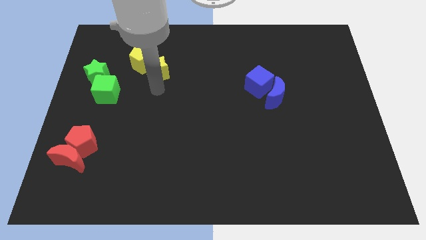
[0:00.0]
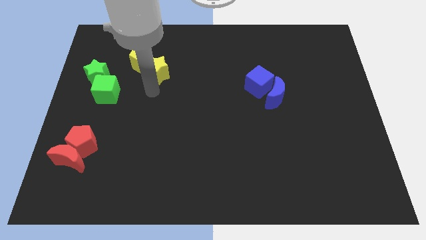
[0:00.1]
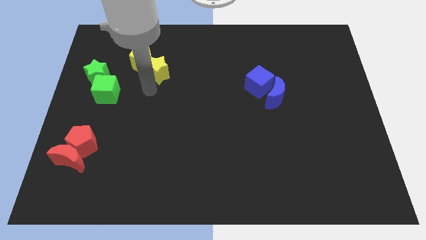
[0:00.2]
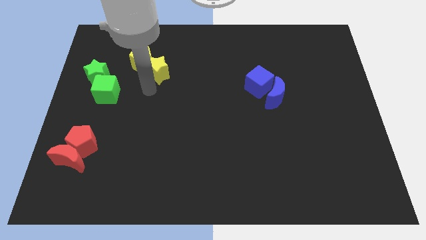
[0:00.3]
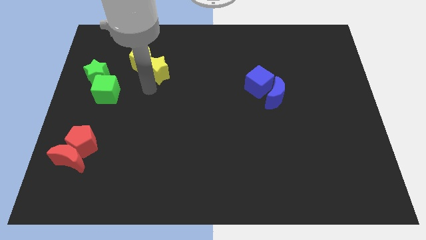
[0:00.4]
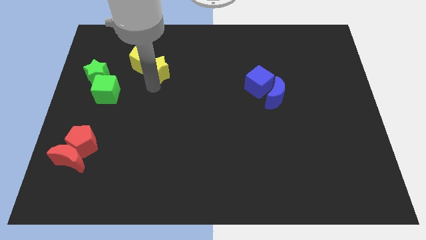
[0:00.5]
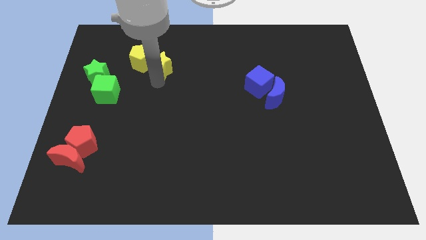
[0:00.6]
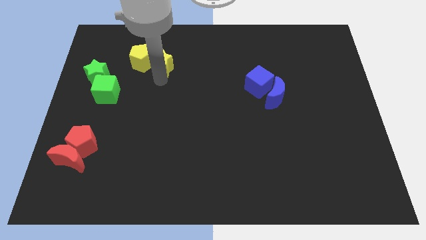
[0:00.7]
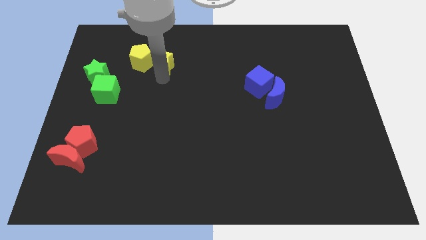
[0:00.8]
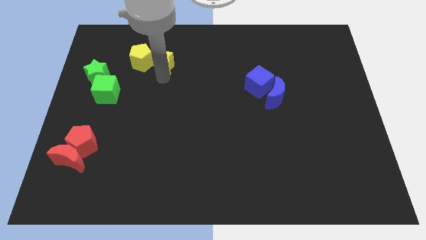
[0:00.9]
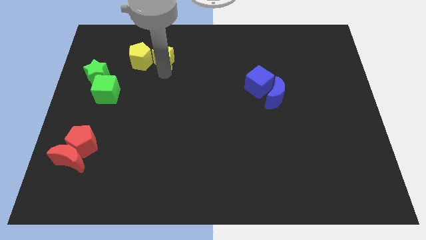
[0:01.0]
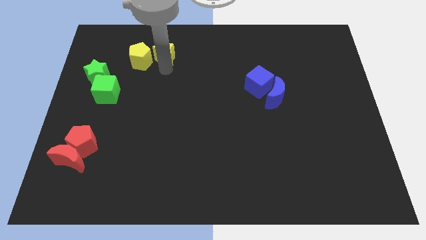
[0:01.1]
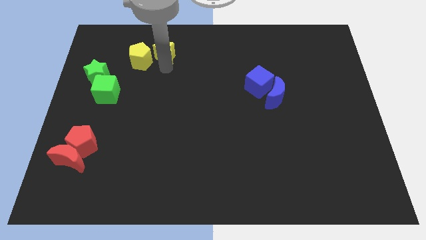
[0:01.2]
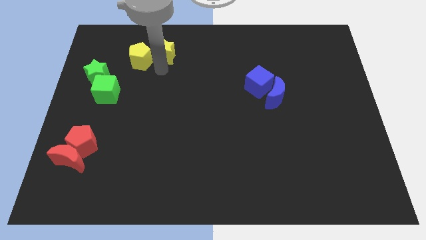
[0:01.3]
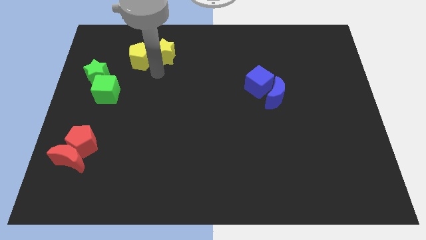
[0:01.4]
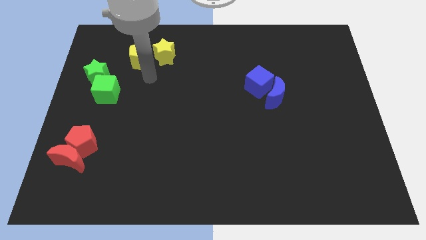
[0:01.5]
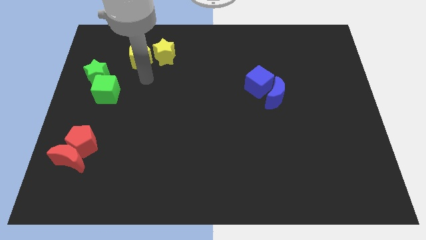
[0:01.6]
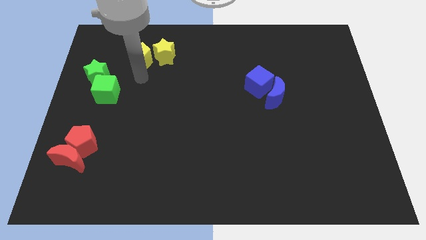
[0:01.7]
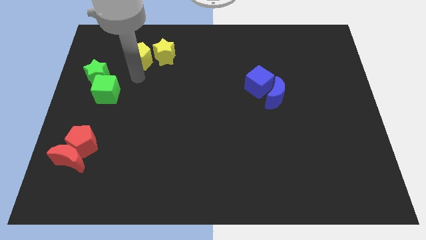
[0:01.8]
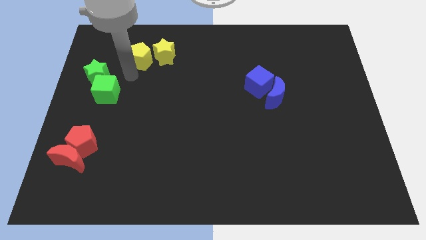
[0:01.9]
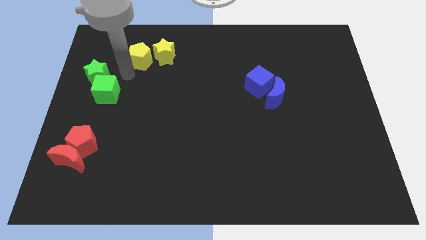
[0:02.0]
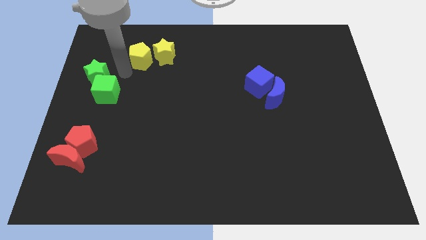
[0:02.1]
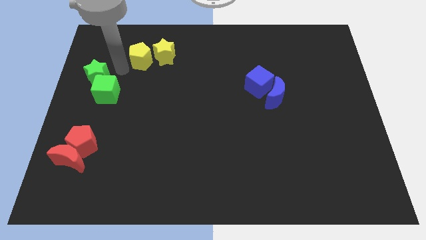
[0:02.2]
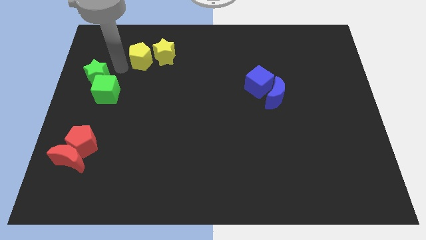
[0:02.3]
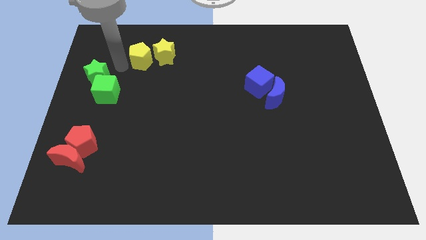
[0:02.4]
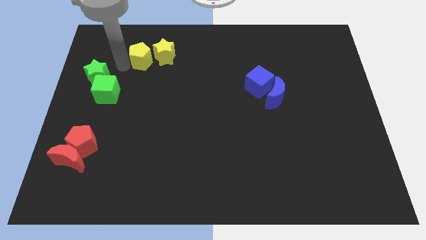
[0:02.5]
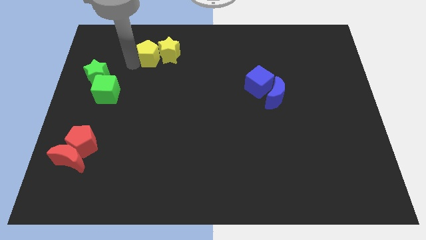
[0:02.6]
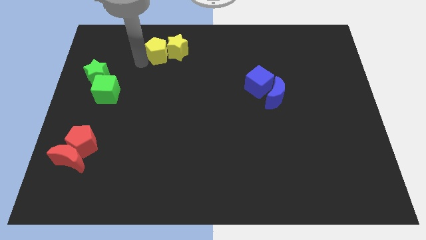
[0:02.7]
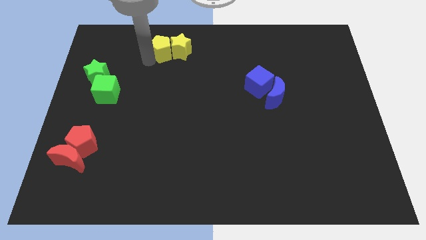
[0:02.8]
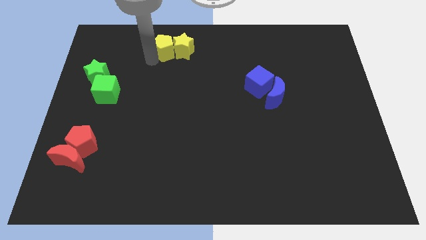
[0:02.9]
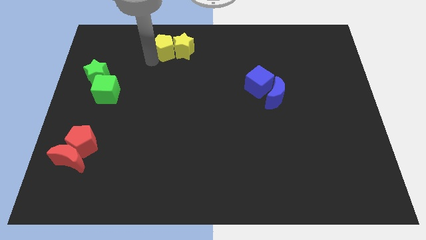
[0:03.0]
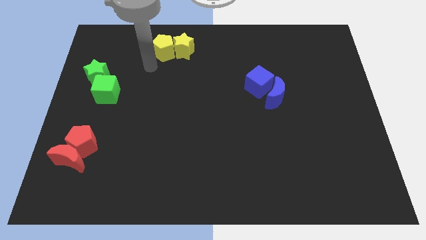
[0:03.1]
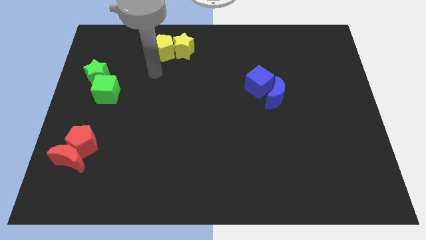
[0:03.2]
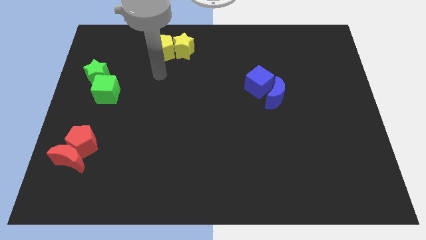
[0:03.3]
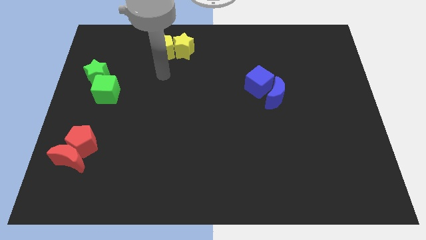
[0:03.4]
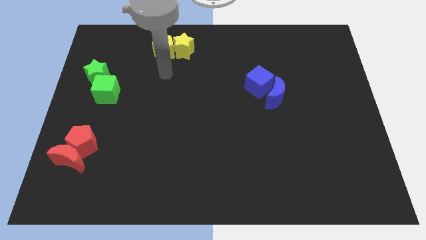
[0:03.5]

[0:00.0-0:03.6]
push the yellow blocks to the top of the board

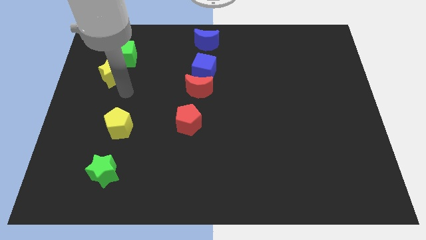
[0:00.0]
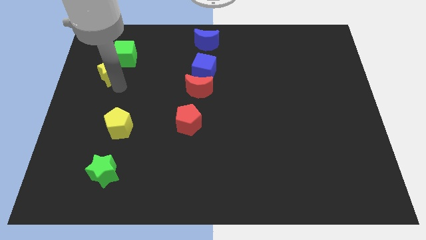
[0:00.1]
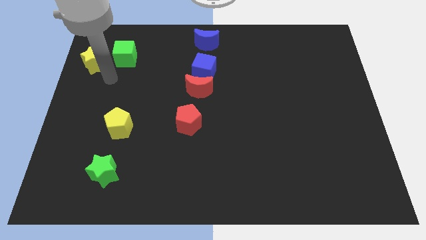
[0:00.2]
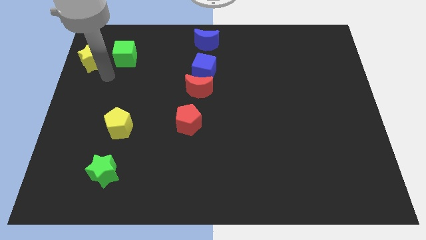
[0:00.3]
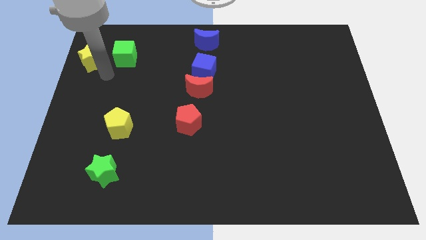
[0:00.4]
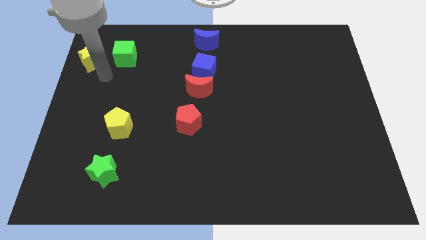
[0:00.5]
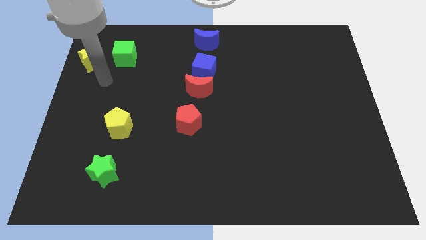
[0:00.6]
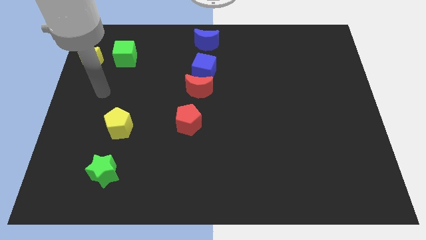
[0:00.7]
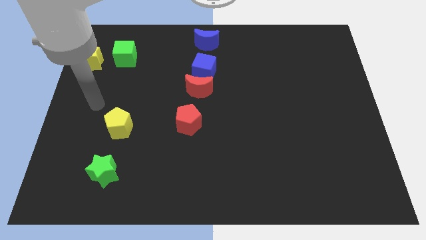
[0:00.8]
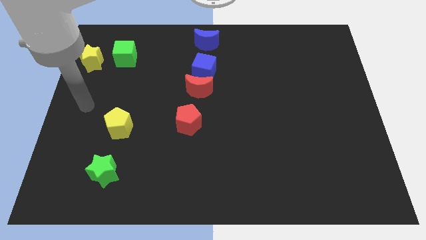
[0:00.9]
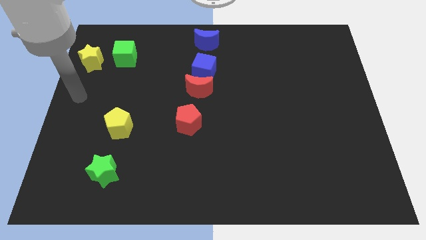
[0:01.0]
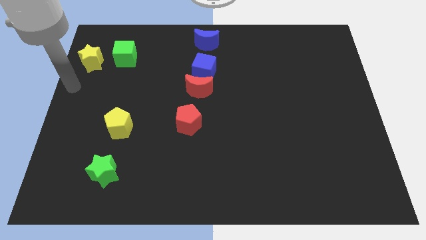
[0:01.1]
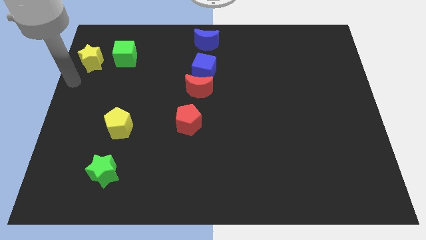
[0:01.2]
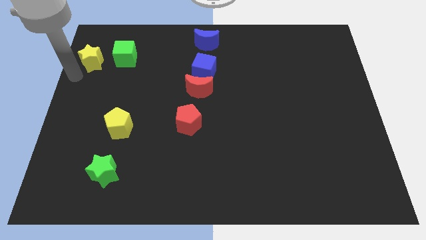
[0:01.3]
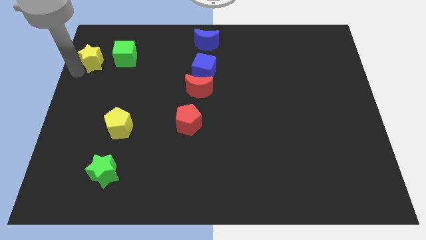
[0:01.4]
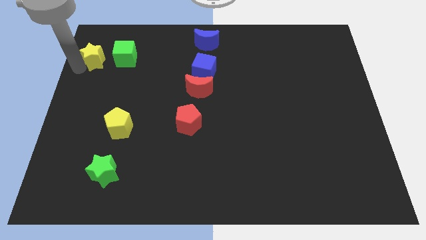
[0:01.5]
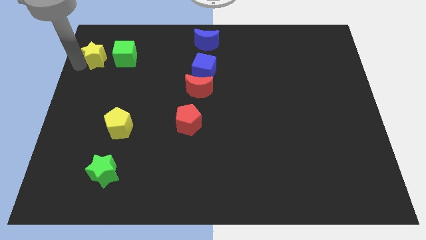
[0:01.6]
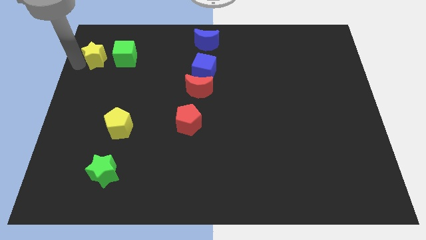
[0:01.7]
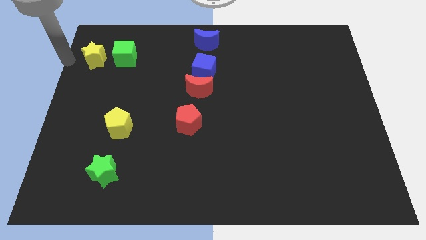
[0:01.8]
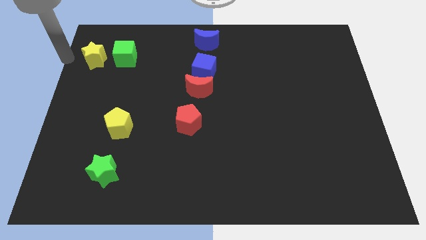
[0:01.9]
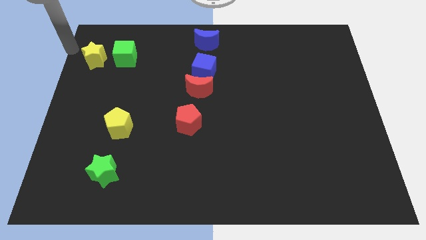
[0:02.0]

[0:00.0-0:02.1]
place the yellow star to the left side of green cube

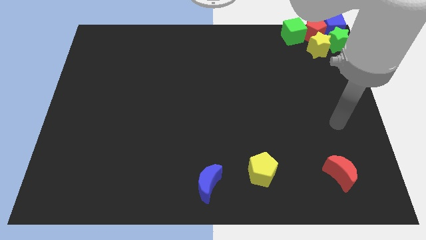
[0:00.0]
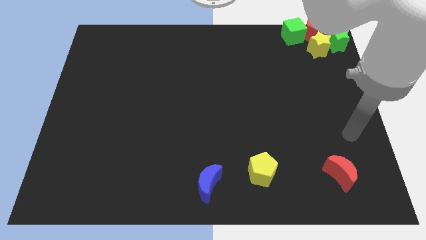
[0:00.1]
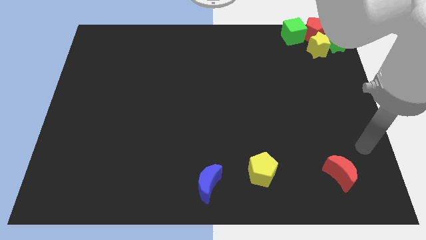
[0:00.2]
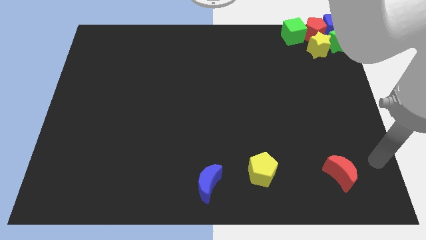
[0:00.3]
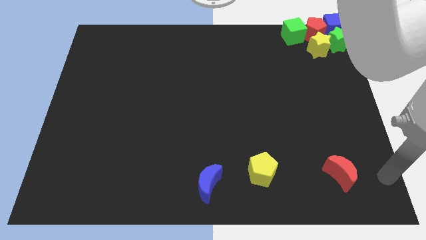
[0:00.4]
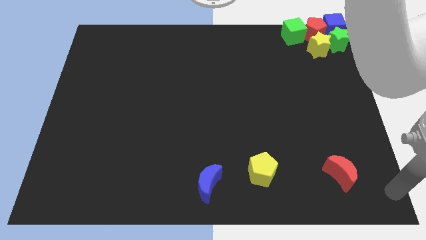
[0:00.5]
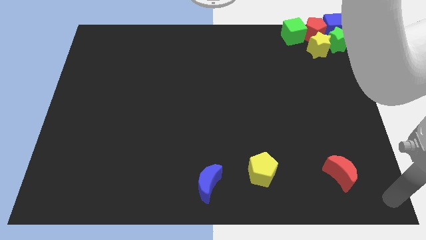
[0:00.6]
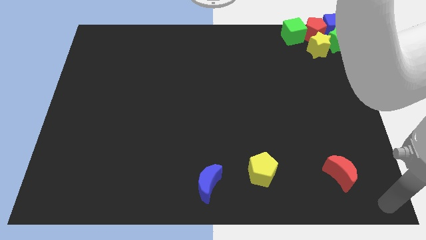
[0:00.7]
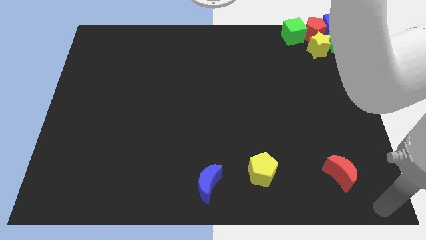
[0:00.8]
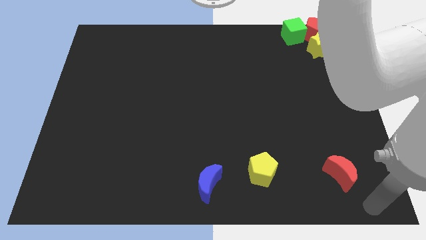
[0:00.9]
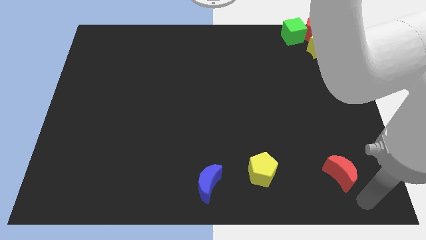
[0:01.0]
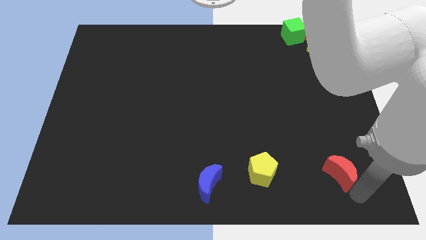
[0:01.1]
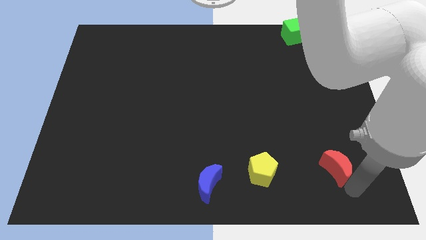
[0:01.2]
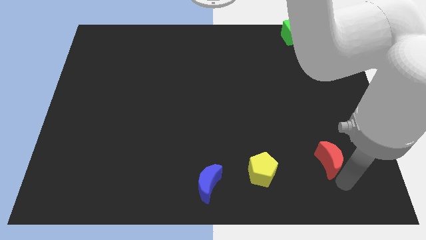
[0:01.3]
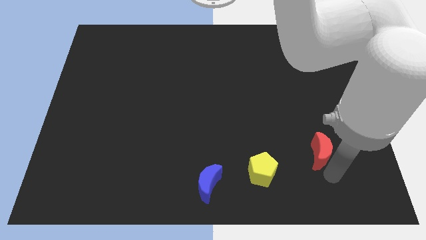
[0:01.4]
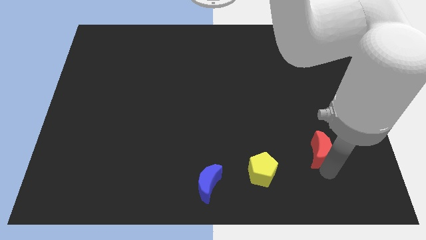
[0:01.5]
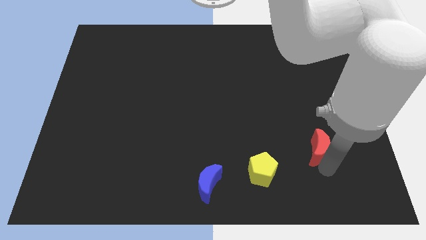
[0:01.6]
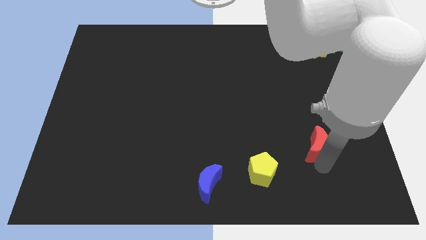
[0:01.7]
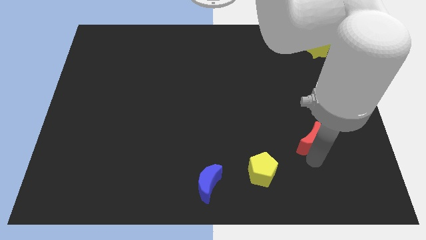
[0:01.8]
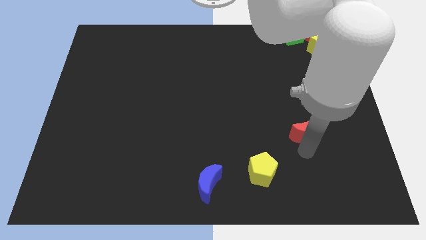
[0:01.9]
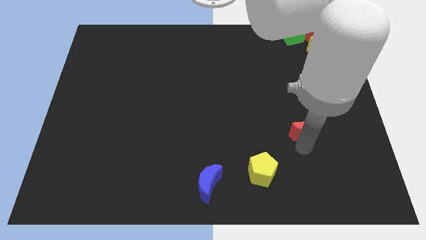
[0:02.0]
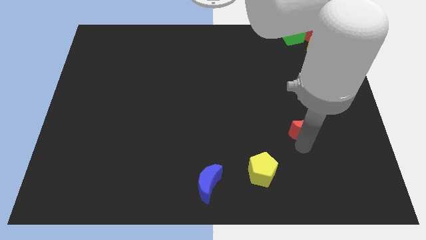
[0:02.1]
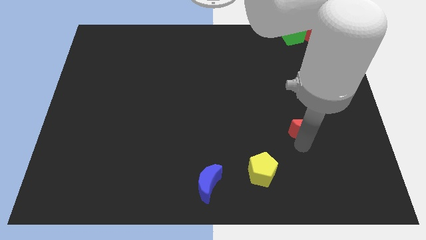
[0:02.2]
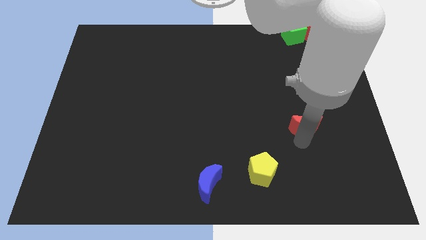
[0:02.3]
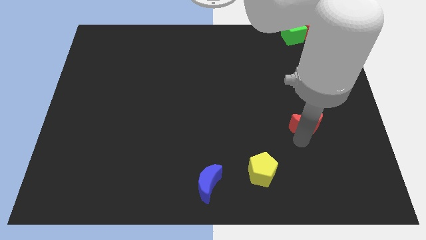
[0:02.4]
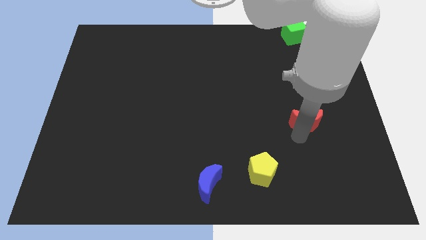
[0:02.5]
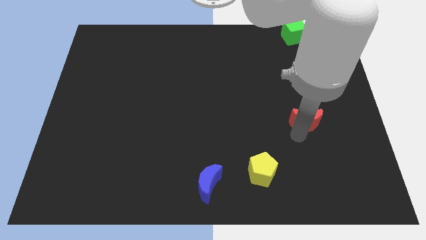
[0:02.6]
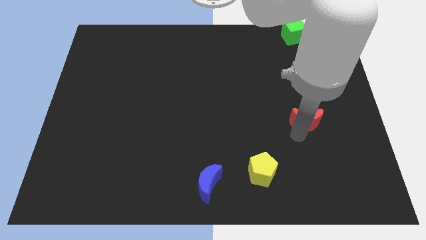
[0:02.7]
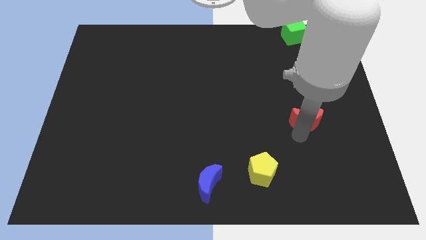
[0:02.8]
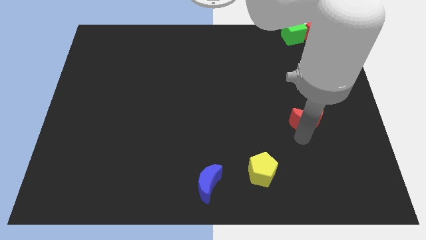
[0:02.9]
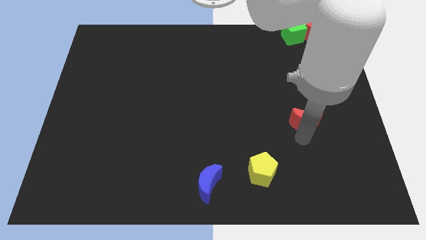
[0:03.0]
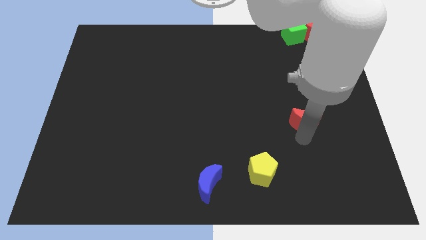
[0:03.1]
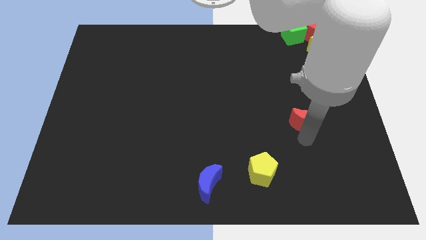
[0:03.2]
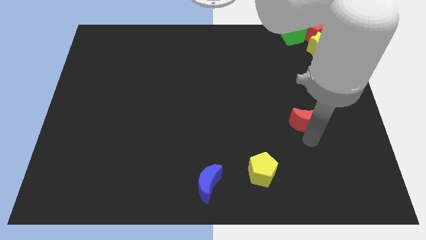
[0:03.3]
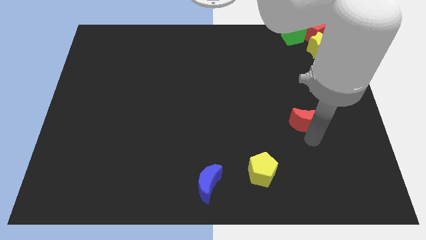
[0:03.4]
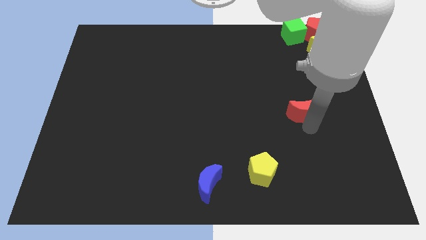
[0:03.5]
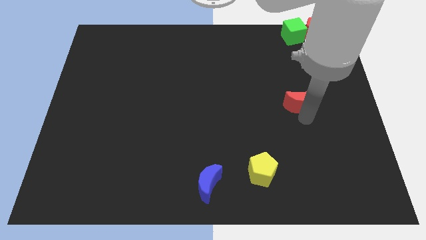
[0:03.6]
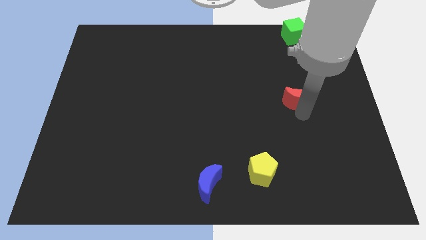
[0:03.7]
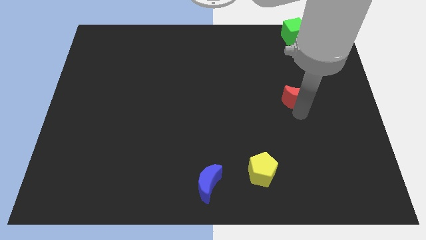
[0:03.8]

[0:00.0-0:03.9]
push the red moon towards the top side
